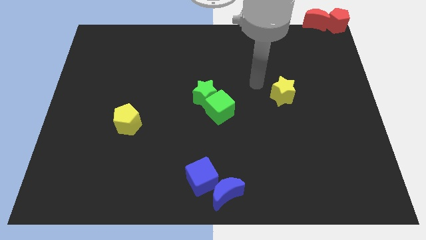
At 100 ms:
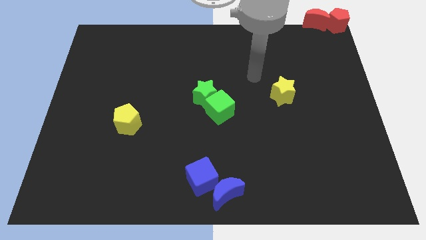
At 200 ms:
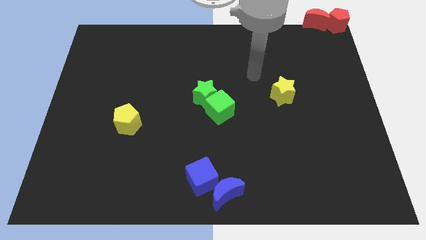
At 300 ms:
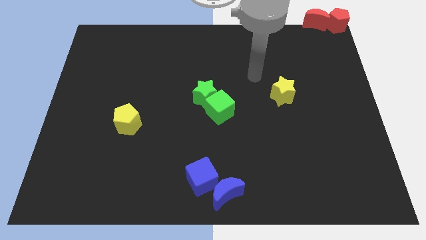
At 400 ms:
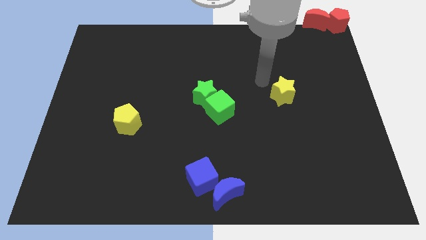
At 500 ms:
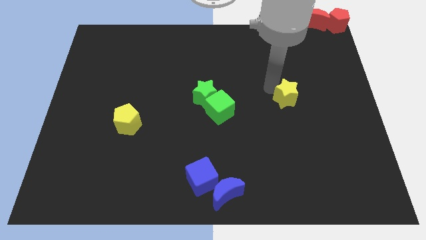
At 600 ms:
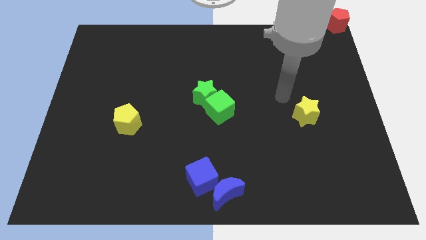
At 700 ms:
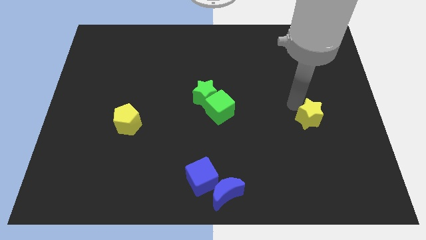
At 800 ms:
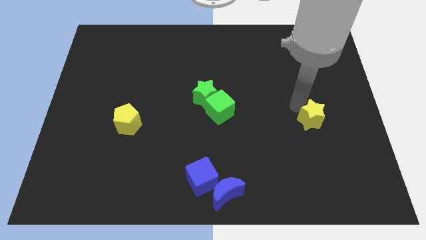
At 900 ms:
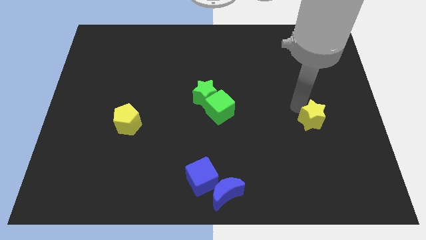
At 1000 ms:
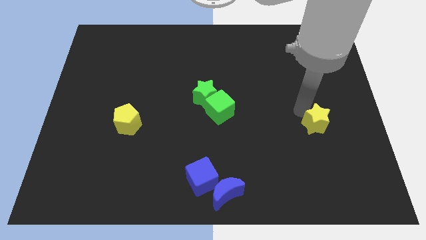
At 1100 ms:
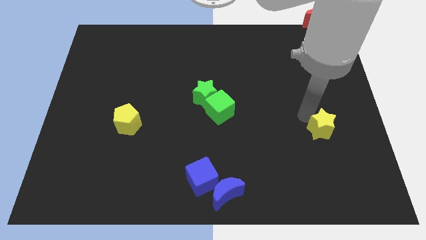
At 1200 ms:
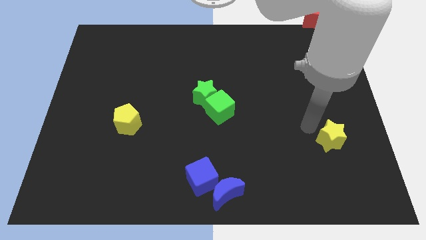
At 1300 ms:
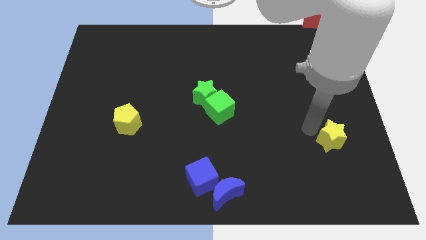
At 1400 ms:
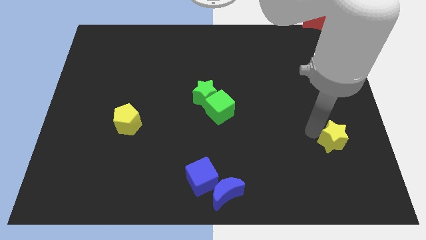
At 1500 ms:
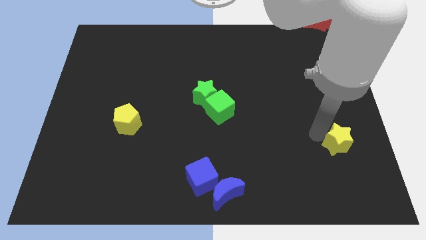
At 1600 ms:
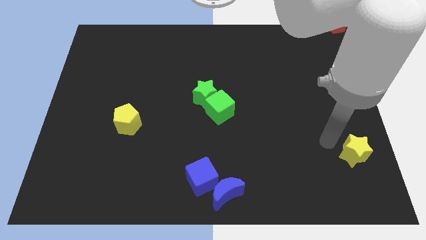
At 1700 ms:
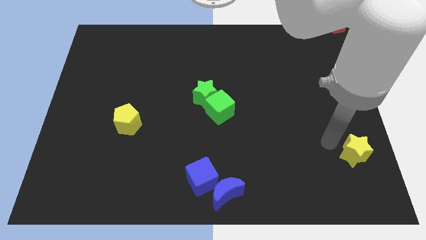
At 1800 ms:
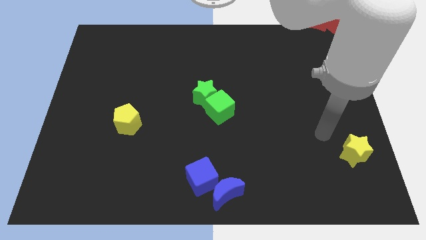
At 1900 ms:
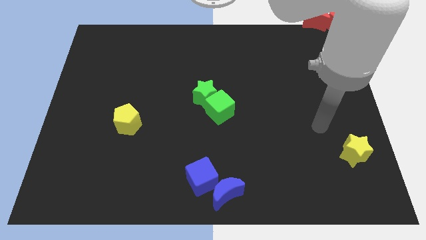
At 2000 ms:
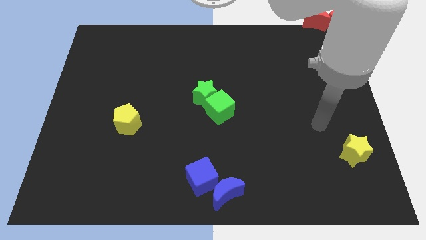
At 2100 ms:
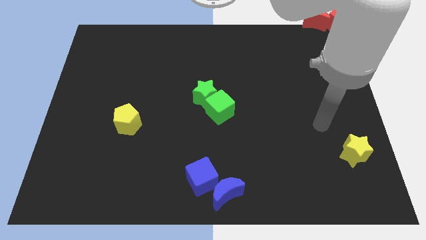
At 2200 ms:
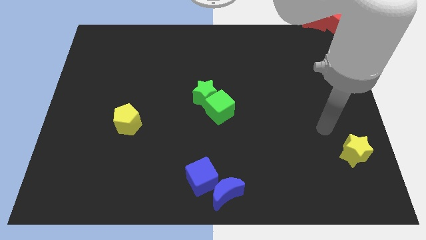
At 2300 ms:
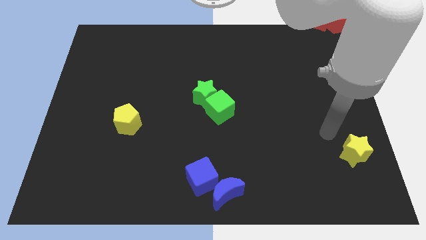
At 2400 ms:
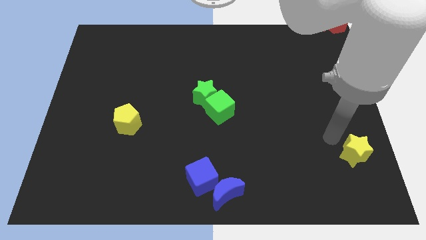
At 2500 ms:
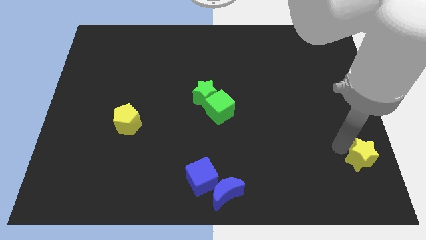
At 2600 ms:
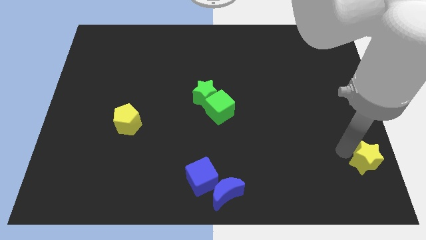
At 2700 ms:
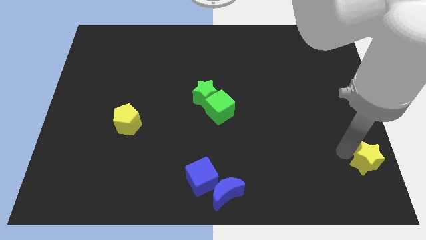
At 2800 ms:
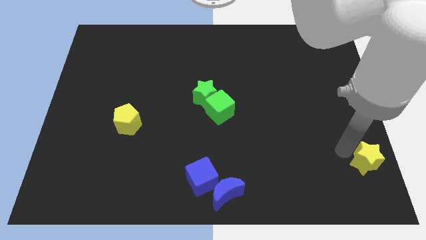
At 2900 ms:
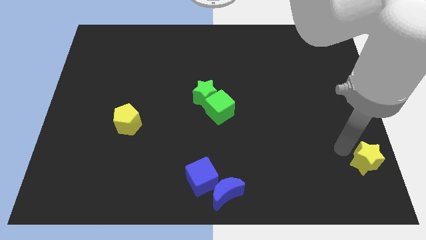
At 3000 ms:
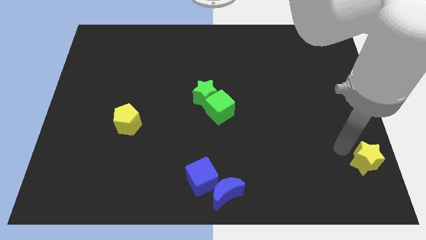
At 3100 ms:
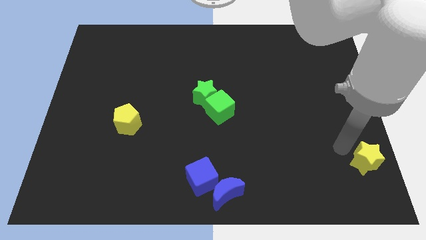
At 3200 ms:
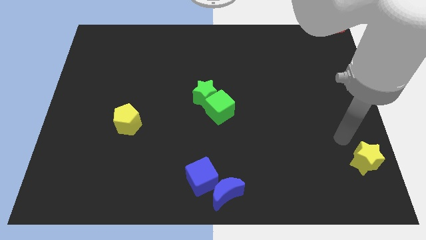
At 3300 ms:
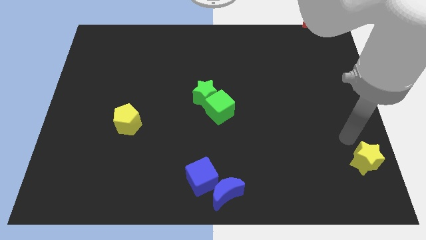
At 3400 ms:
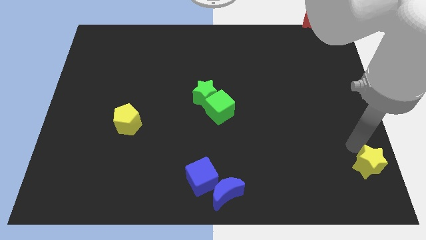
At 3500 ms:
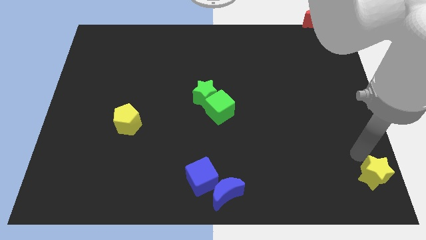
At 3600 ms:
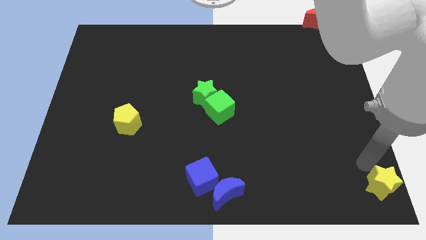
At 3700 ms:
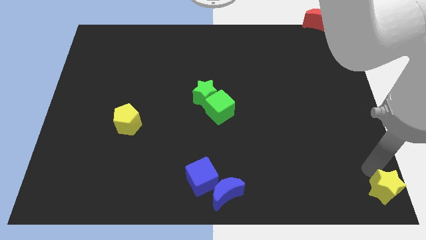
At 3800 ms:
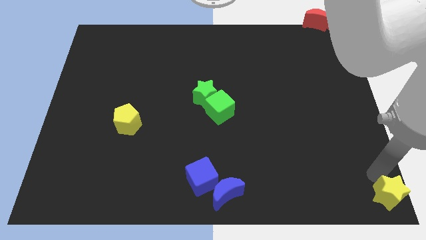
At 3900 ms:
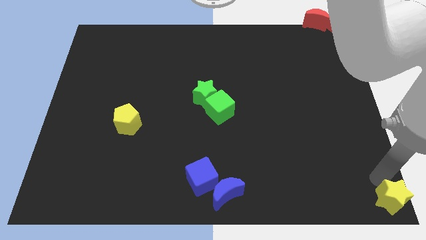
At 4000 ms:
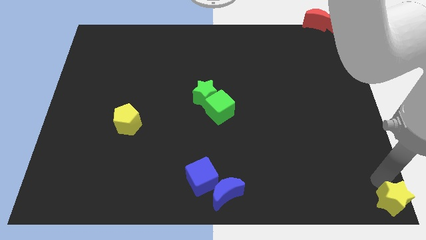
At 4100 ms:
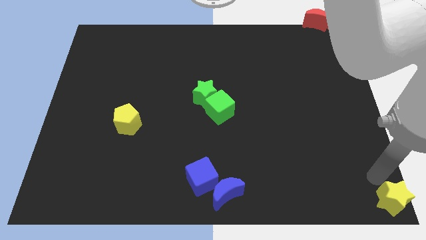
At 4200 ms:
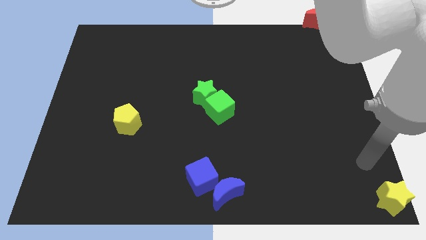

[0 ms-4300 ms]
place the yellow star at the bottom right corner of the board

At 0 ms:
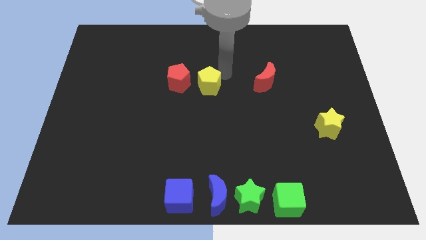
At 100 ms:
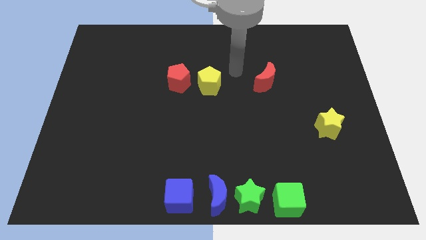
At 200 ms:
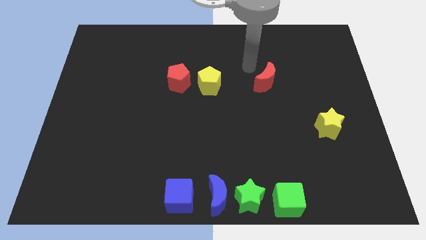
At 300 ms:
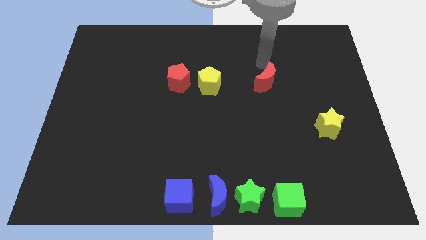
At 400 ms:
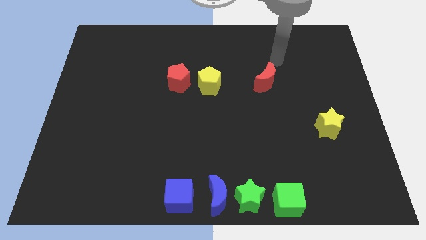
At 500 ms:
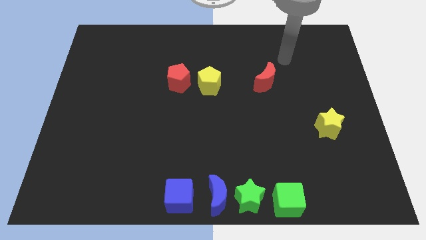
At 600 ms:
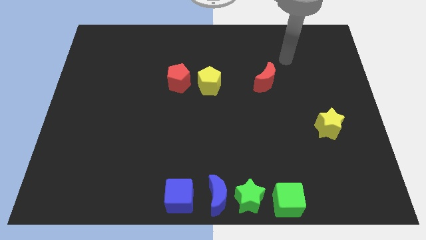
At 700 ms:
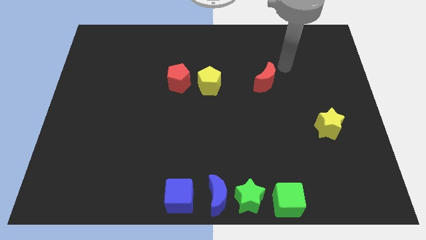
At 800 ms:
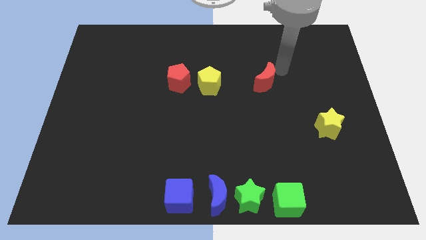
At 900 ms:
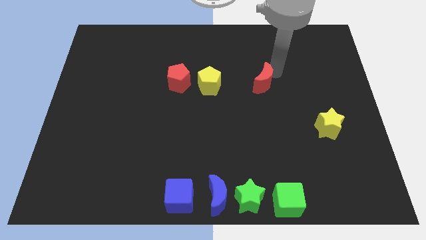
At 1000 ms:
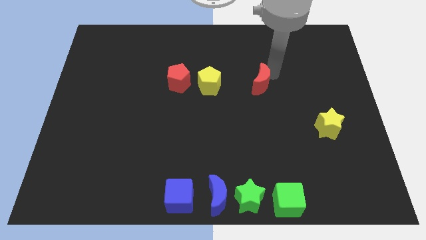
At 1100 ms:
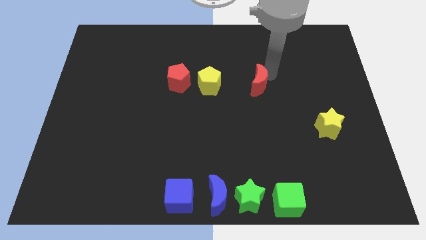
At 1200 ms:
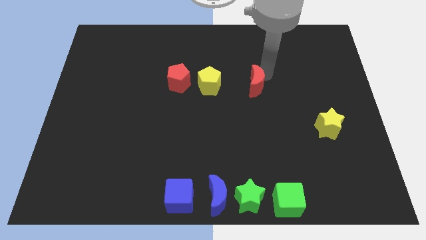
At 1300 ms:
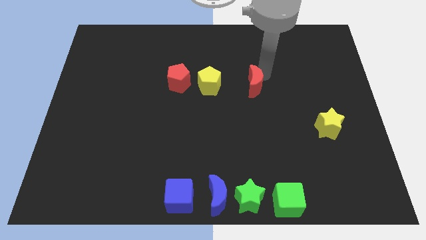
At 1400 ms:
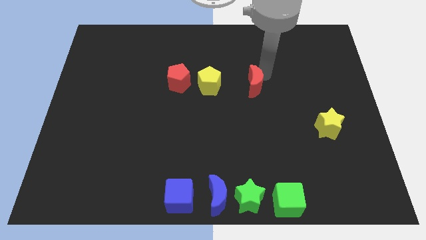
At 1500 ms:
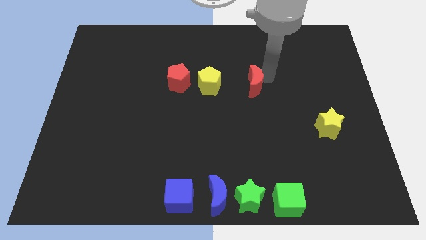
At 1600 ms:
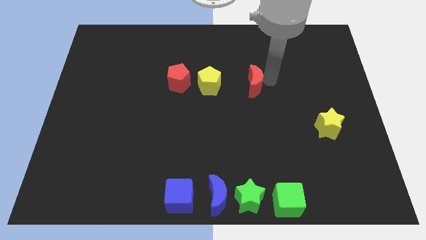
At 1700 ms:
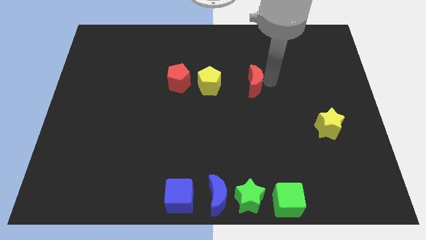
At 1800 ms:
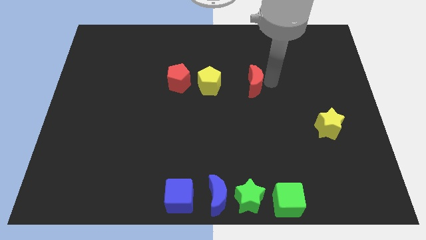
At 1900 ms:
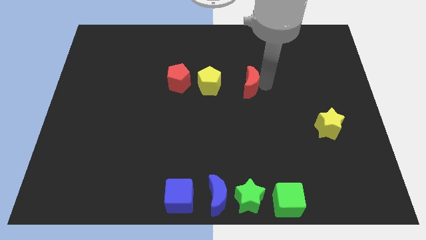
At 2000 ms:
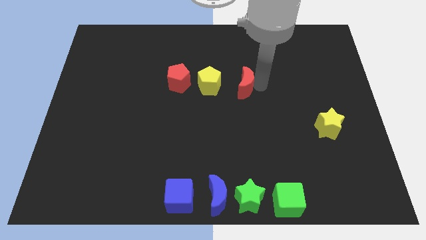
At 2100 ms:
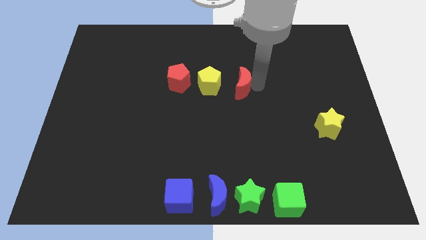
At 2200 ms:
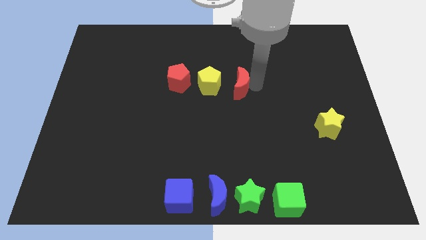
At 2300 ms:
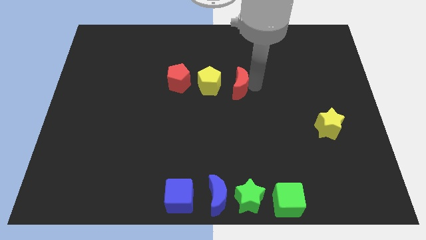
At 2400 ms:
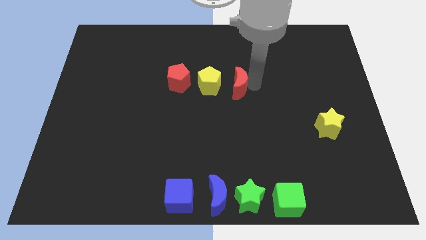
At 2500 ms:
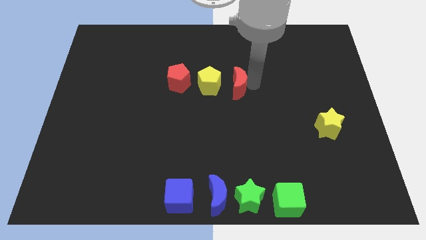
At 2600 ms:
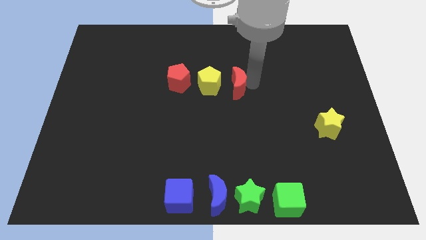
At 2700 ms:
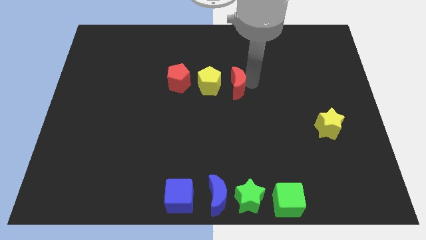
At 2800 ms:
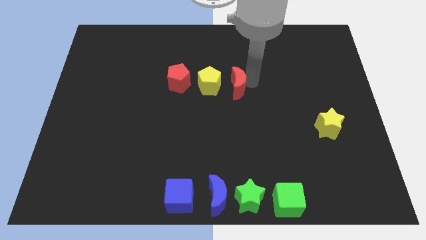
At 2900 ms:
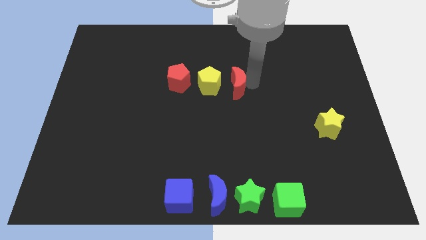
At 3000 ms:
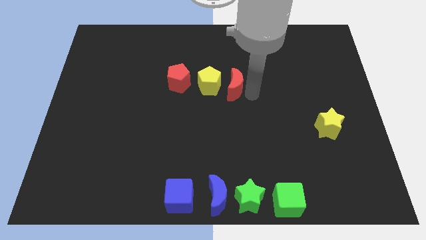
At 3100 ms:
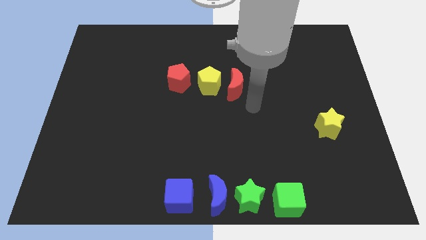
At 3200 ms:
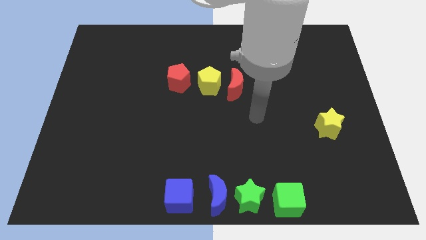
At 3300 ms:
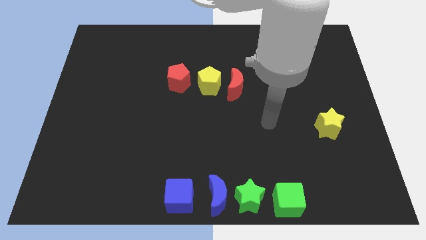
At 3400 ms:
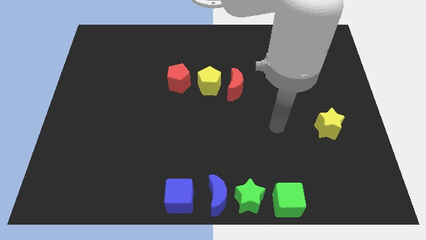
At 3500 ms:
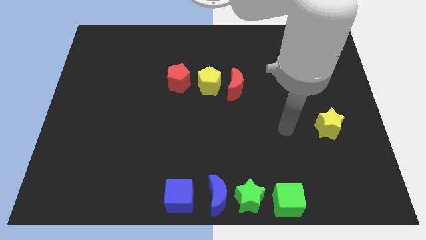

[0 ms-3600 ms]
place the red moon to the right of the yellow pentagon

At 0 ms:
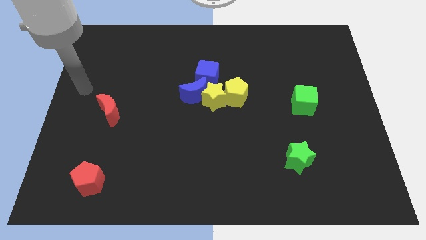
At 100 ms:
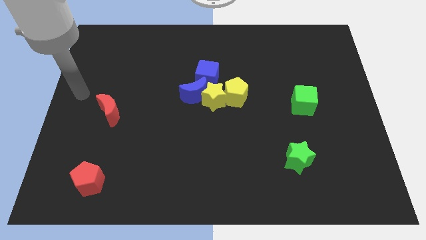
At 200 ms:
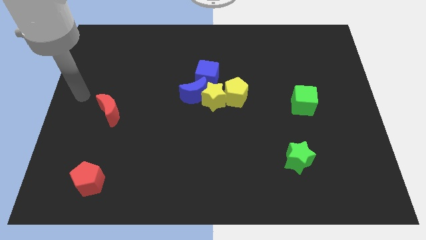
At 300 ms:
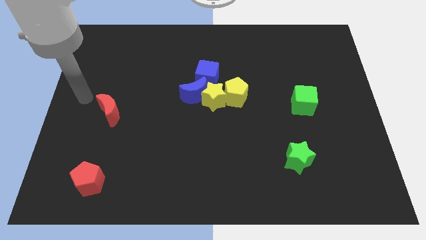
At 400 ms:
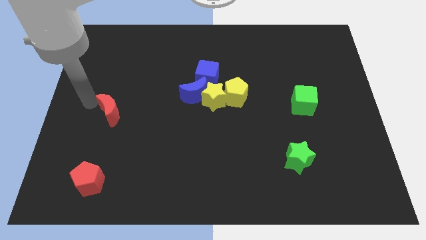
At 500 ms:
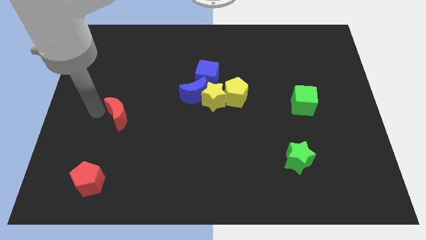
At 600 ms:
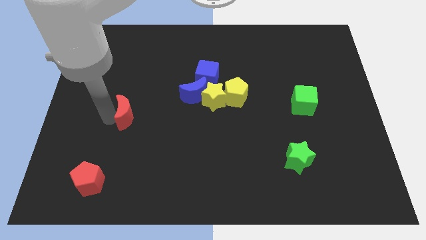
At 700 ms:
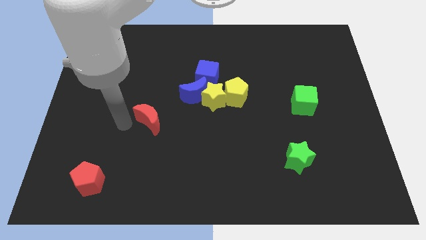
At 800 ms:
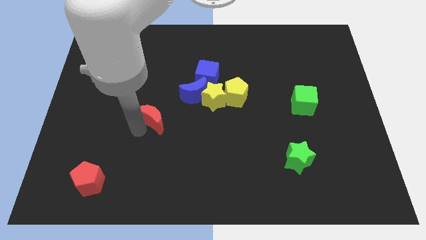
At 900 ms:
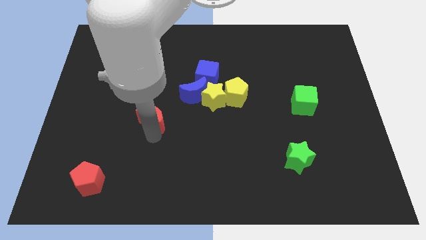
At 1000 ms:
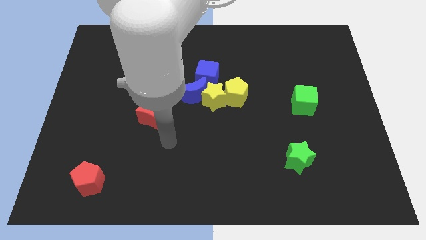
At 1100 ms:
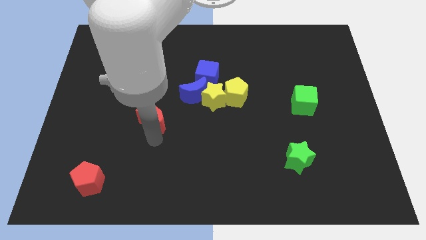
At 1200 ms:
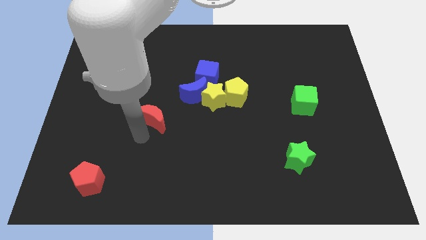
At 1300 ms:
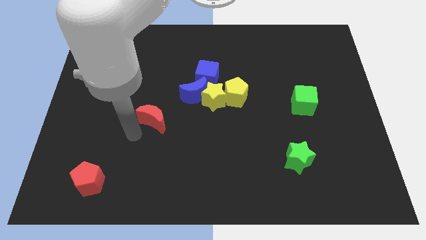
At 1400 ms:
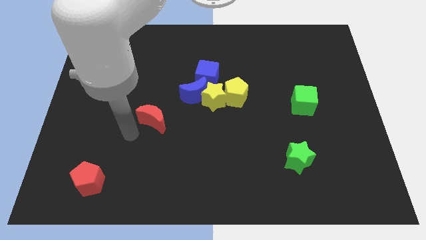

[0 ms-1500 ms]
push red crescent slightly towards right
